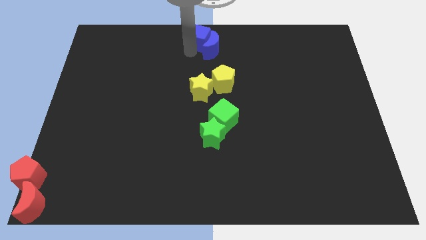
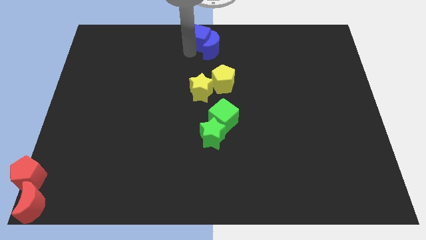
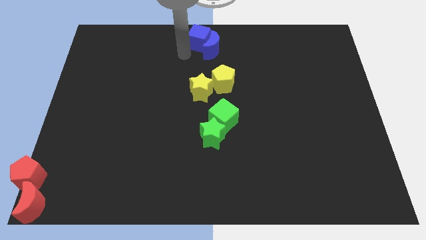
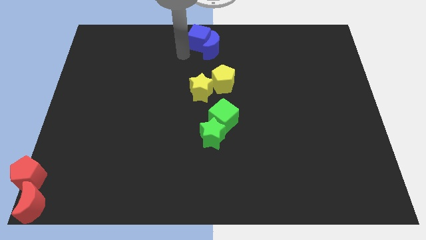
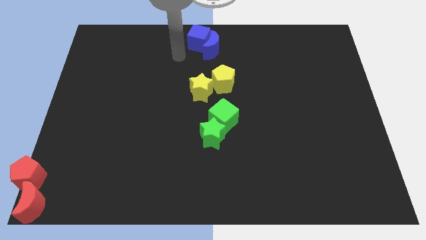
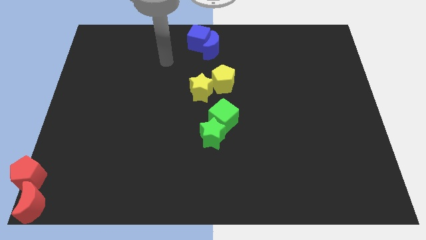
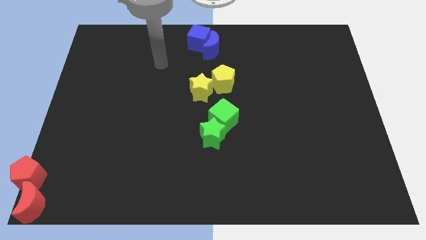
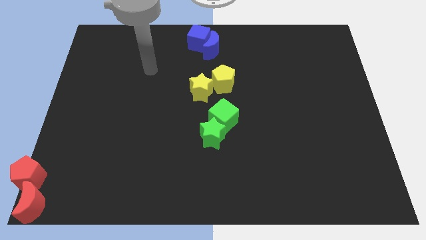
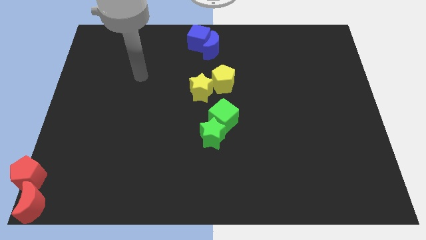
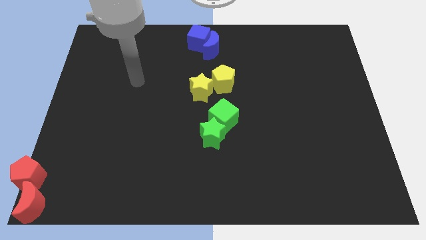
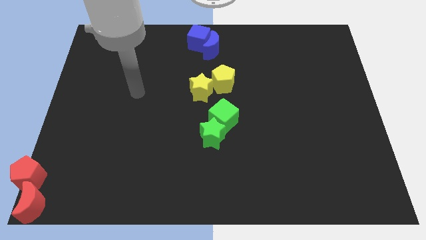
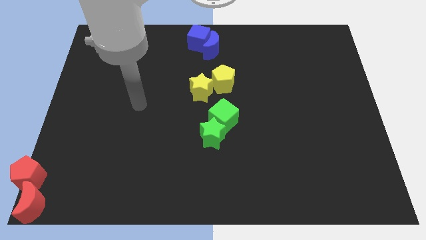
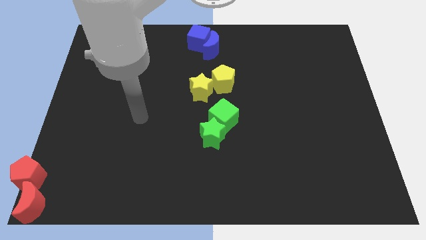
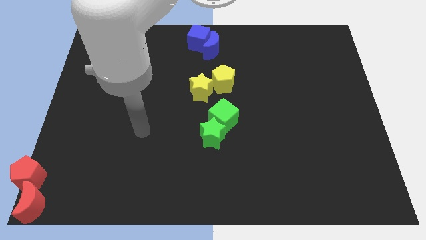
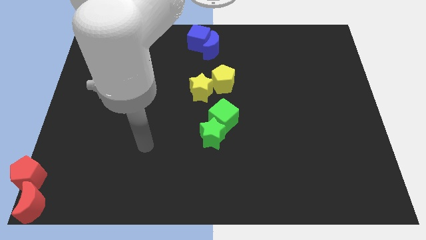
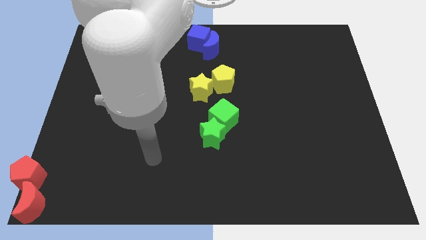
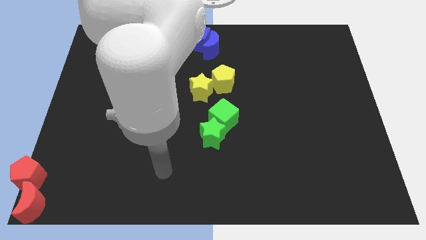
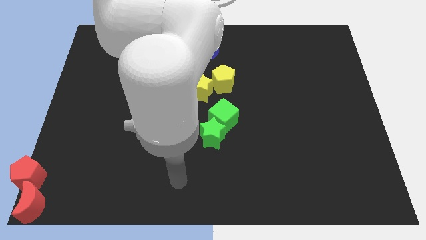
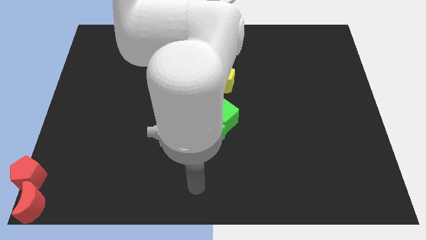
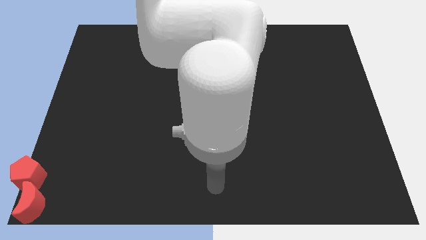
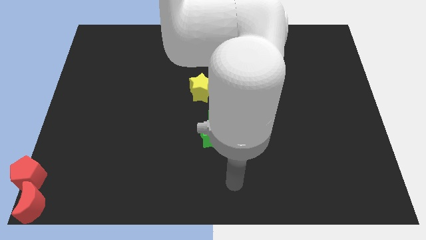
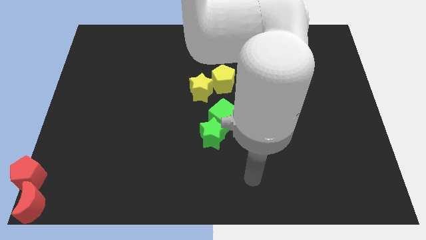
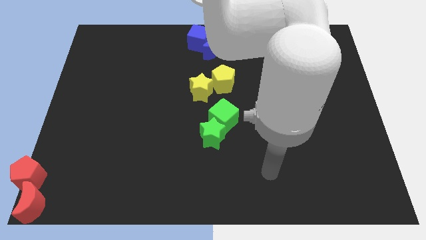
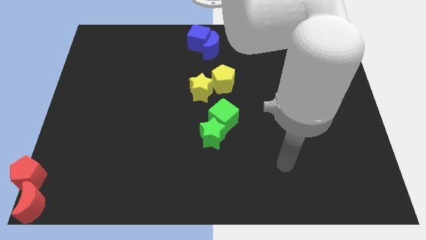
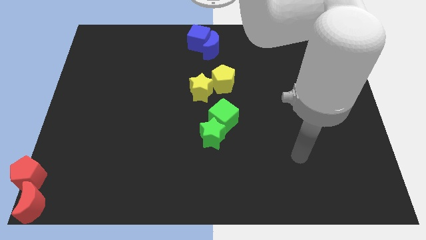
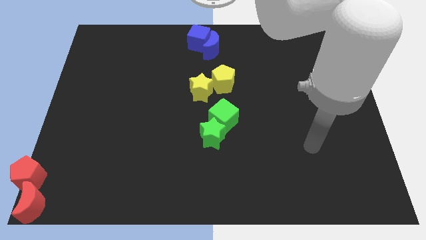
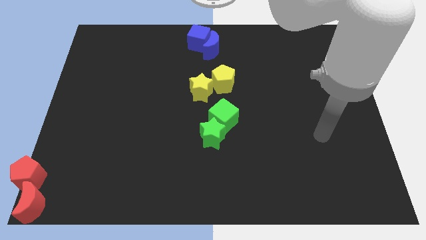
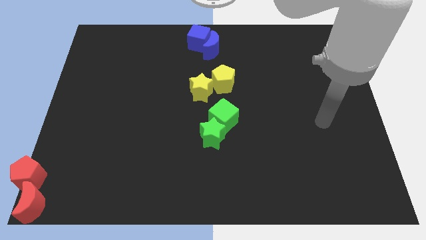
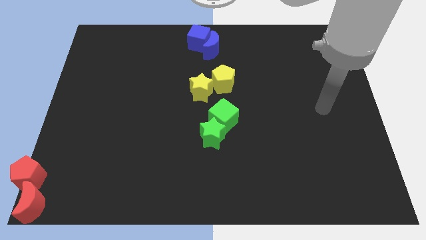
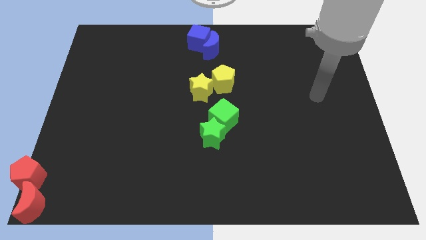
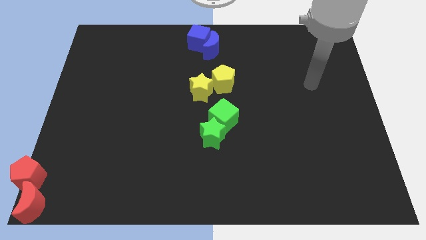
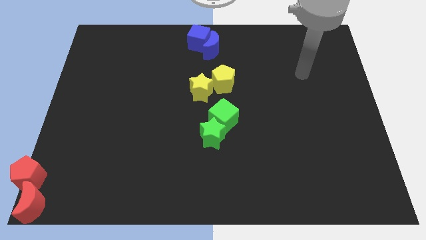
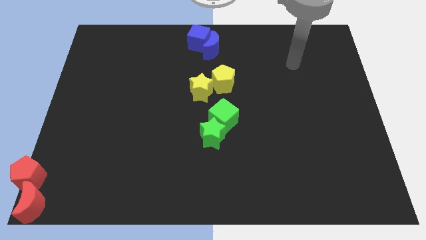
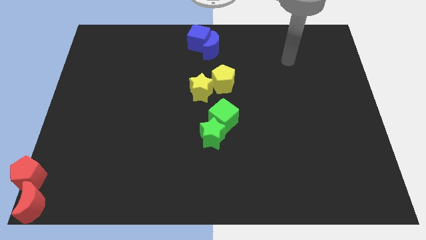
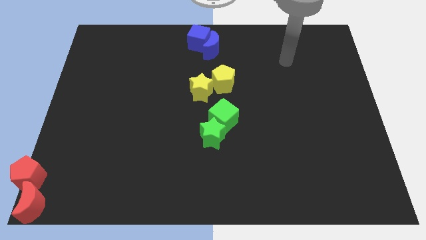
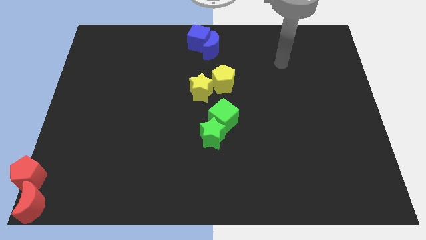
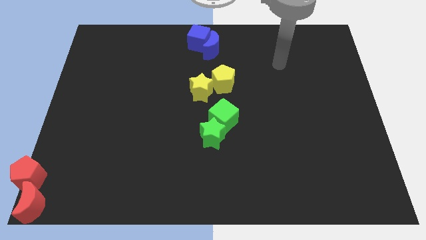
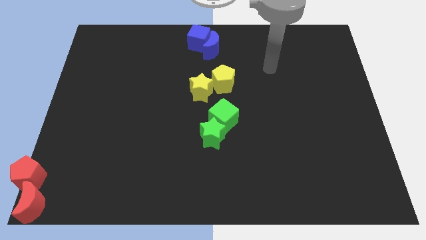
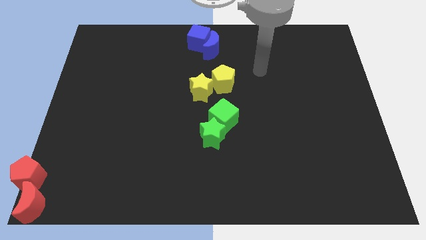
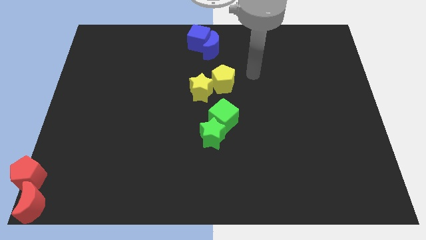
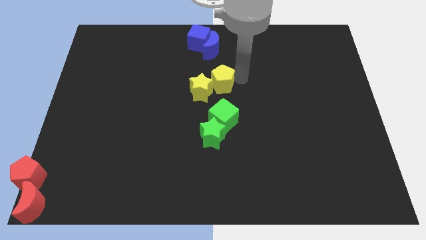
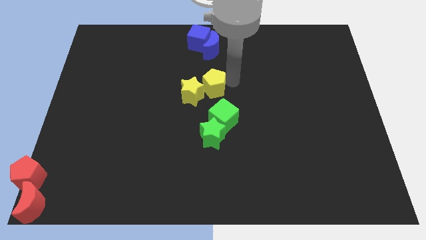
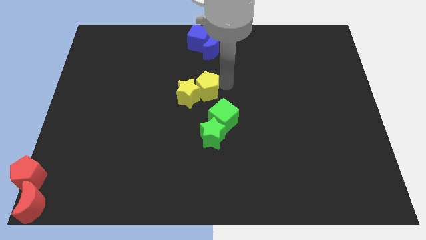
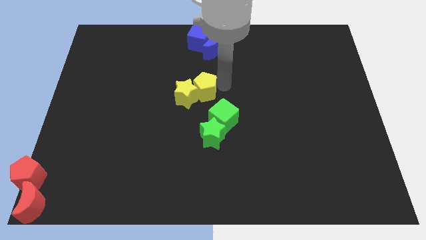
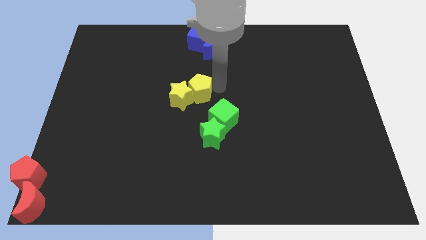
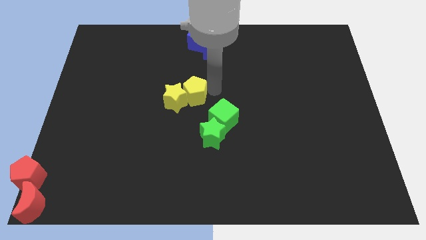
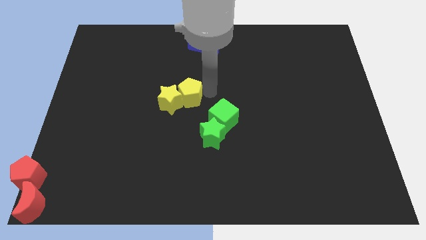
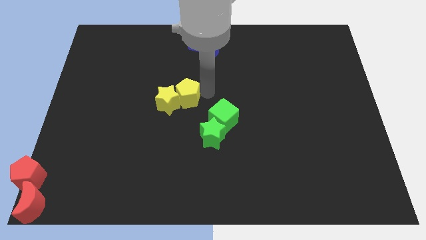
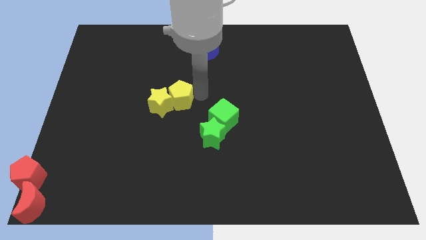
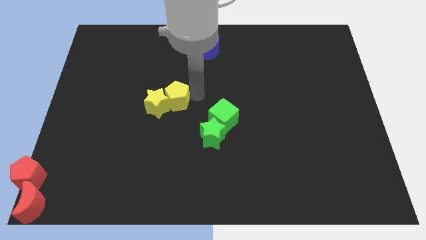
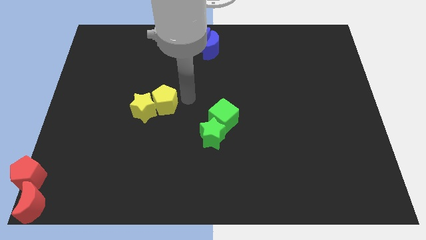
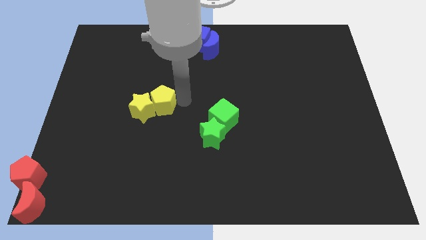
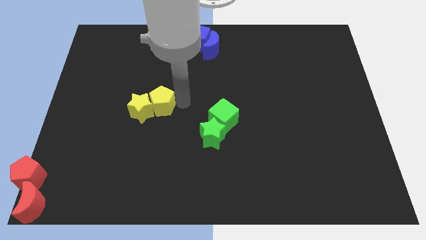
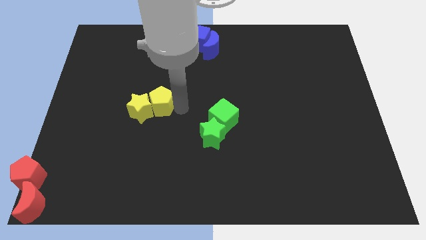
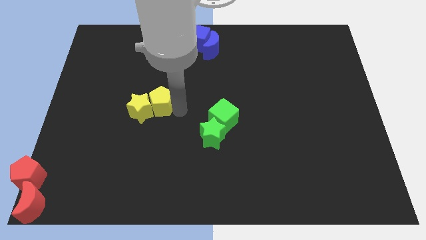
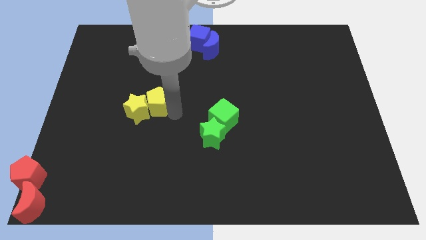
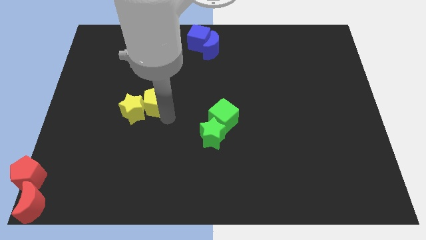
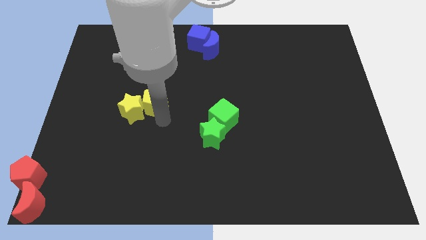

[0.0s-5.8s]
move the yellow blocks towards the left side of the board

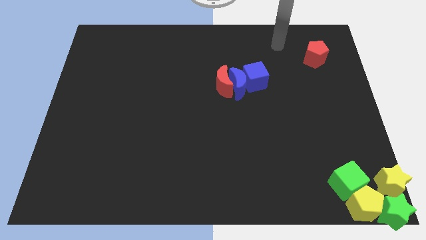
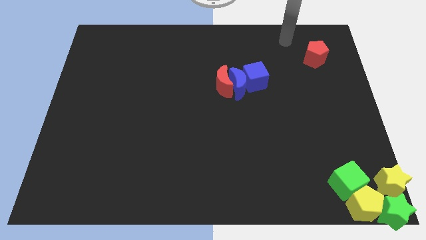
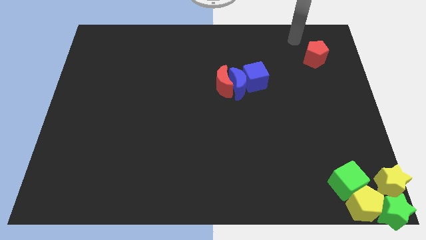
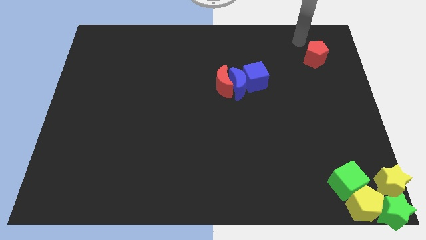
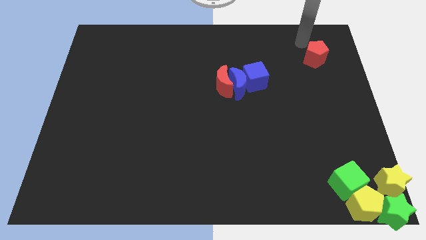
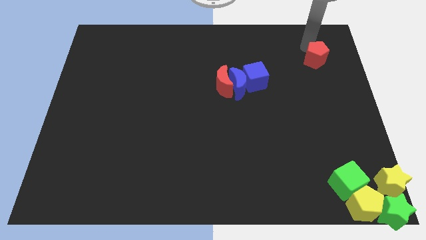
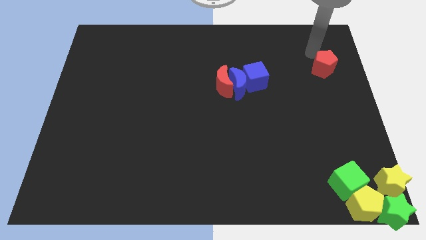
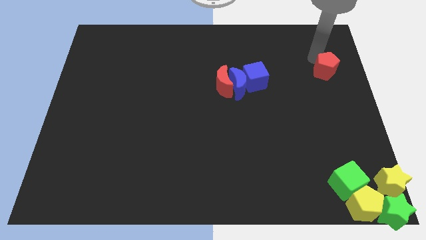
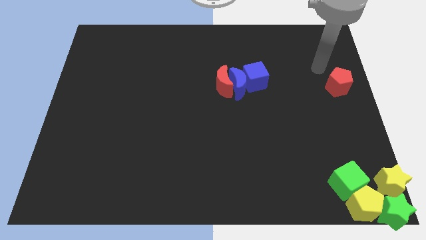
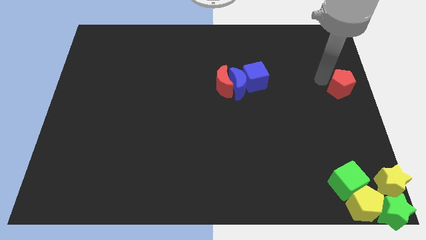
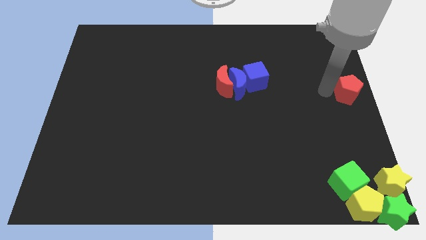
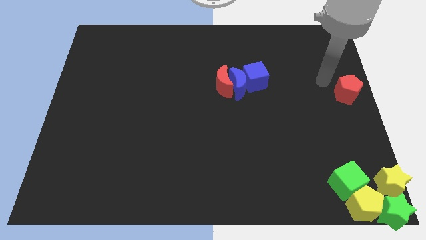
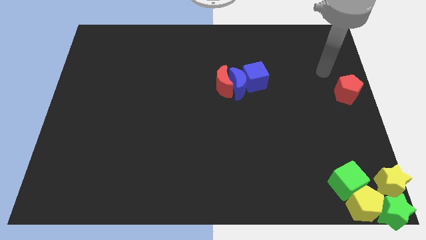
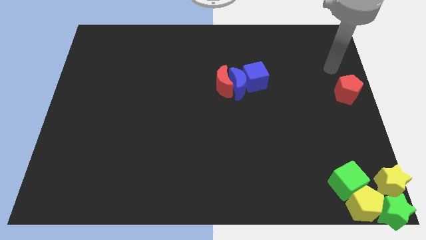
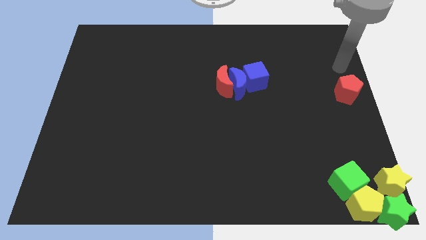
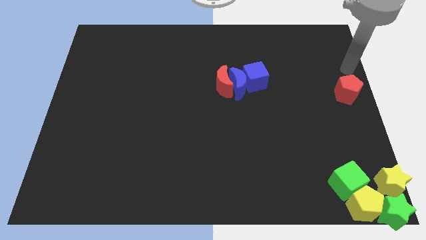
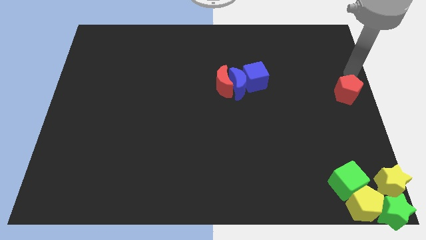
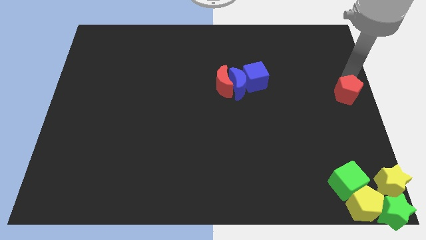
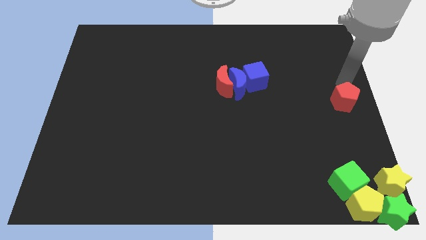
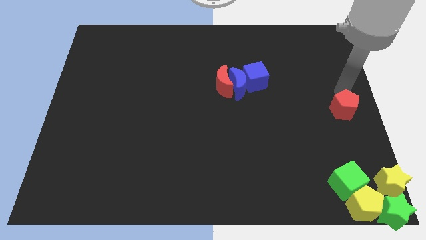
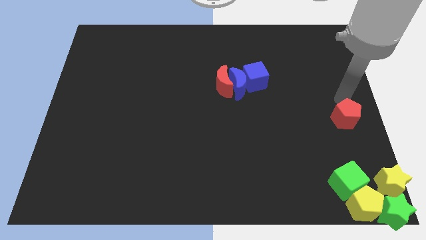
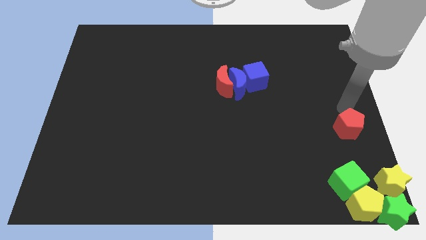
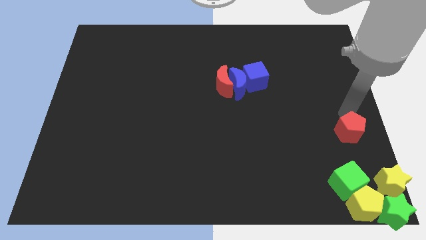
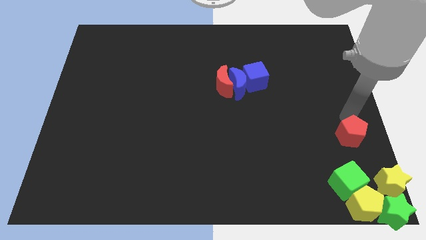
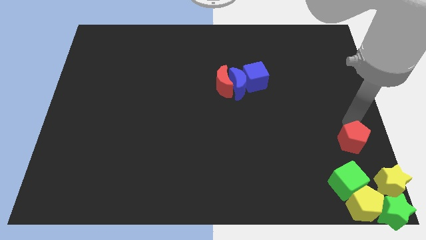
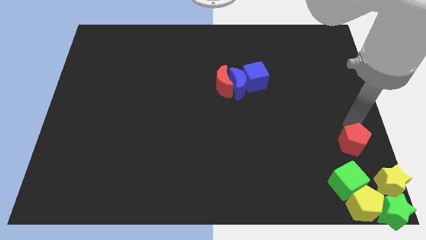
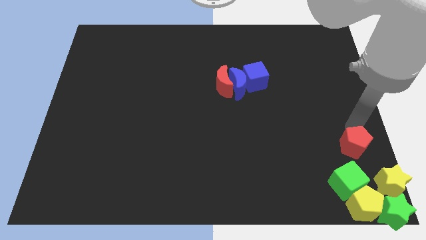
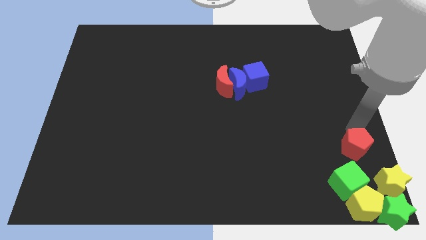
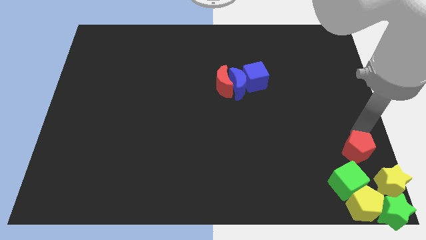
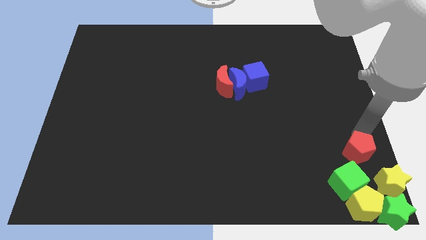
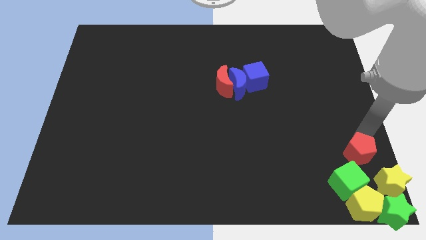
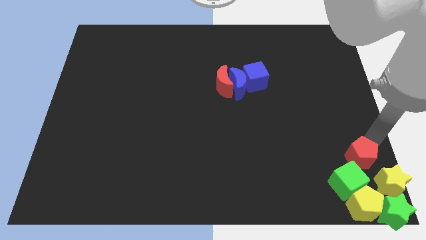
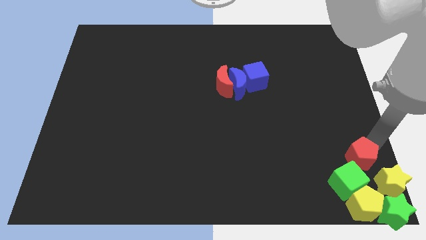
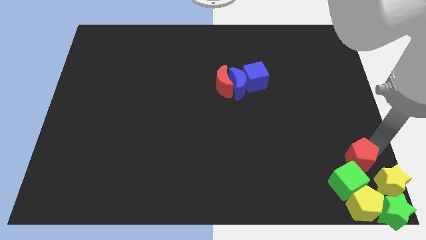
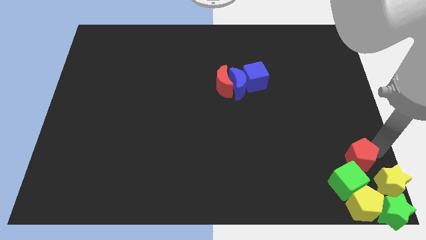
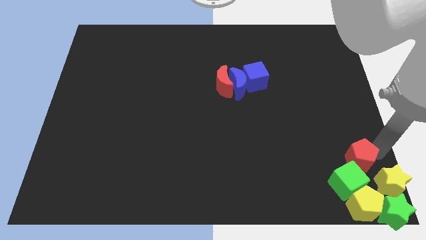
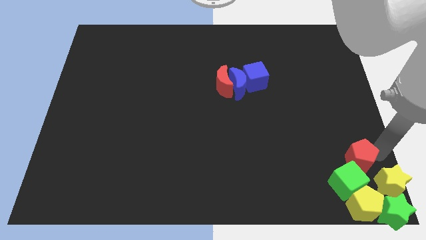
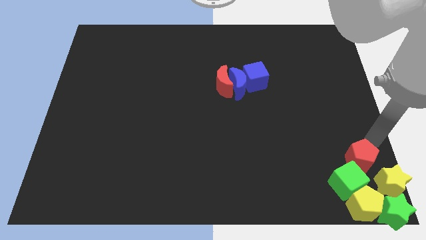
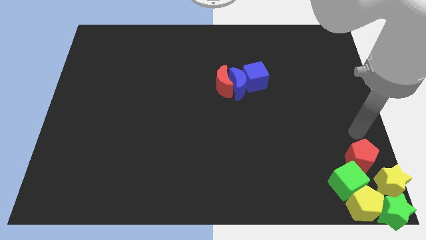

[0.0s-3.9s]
push the red pentagon to the group of object
